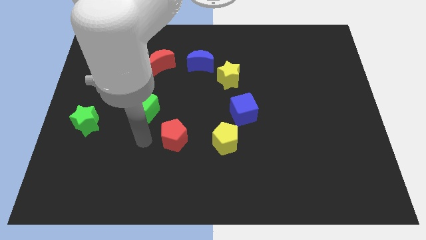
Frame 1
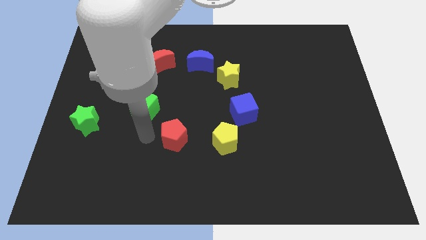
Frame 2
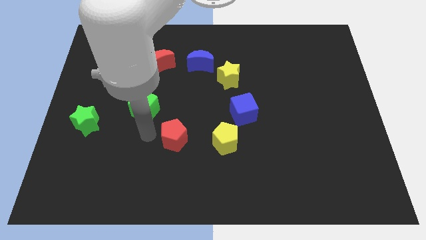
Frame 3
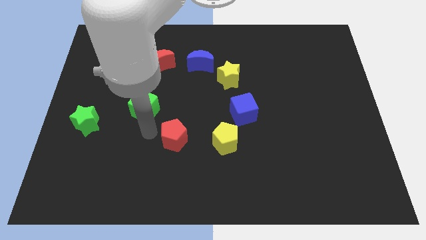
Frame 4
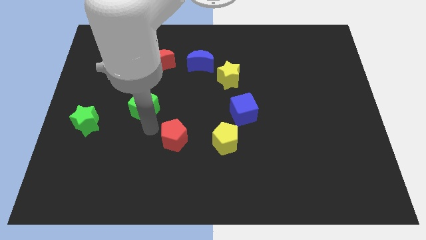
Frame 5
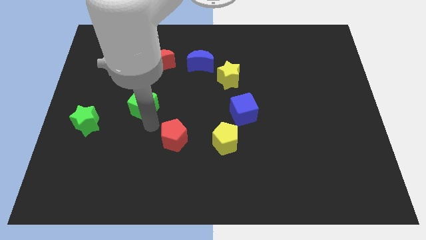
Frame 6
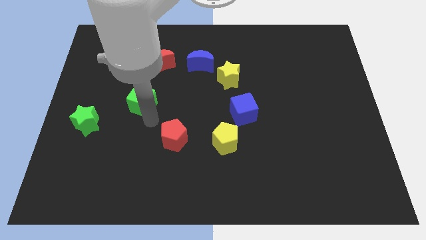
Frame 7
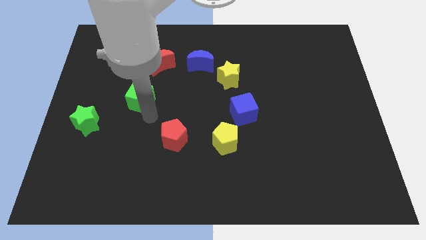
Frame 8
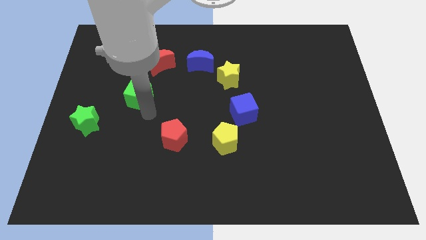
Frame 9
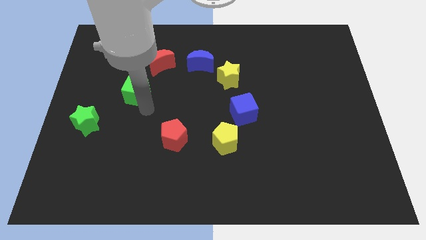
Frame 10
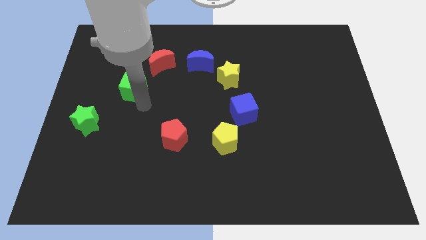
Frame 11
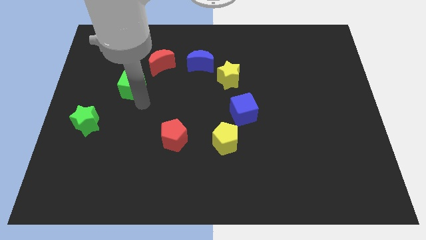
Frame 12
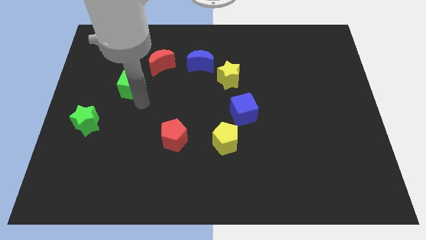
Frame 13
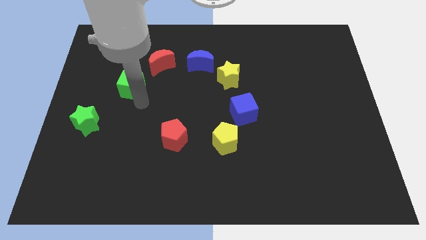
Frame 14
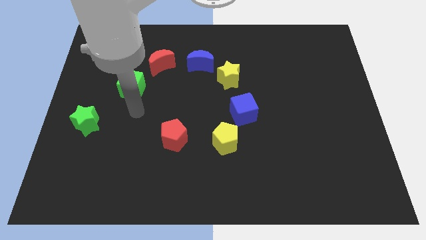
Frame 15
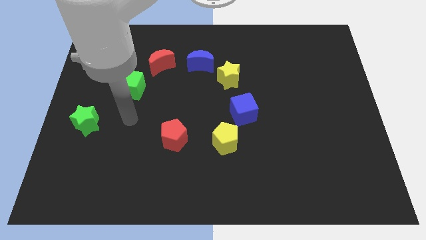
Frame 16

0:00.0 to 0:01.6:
place the green cube diagonally top right to the green star

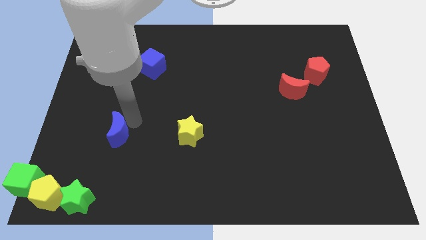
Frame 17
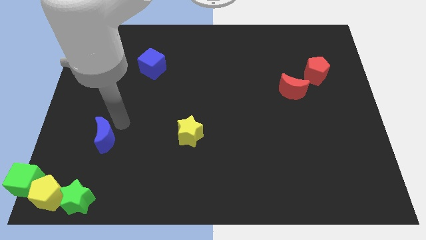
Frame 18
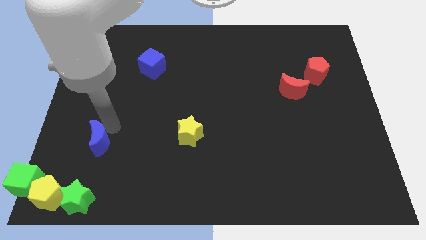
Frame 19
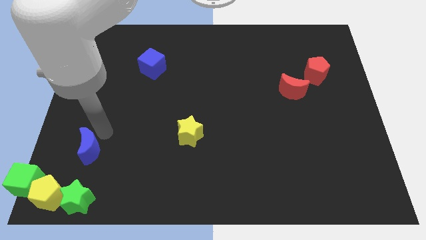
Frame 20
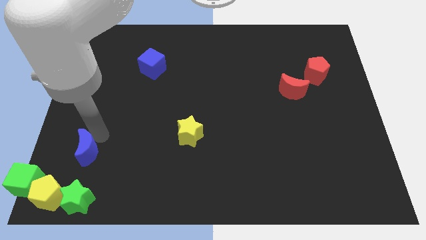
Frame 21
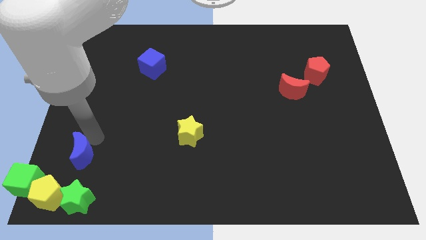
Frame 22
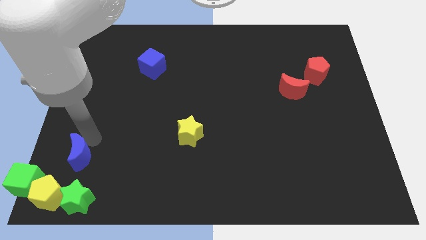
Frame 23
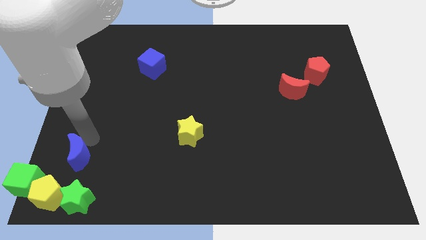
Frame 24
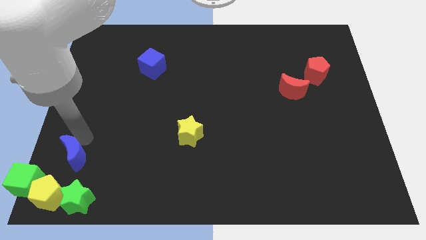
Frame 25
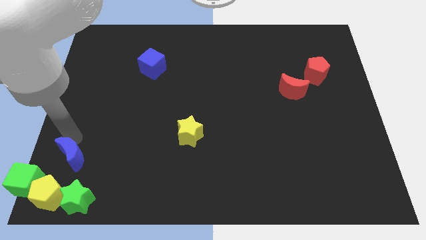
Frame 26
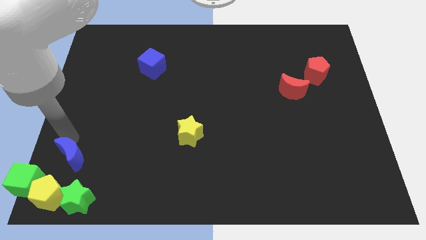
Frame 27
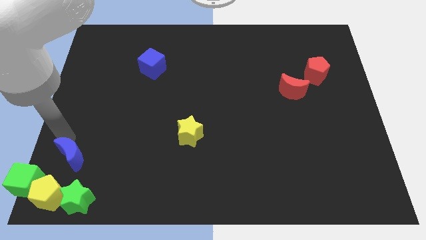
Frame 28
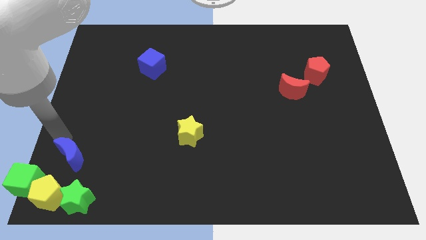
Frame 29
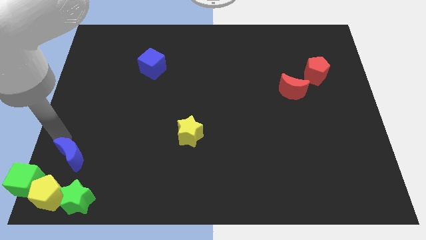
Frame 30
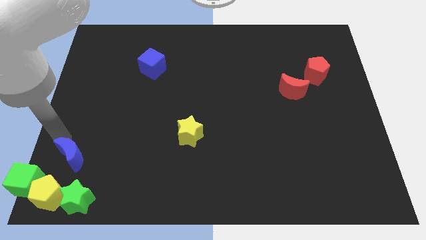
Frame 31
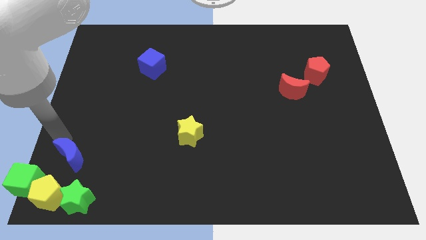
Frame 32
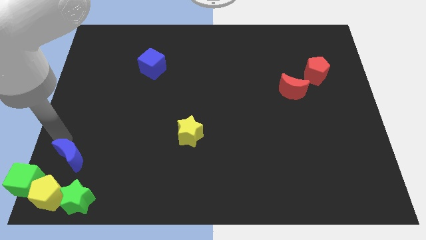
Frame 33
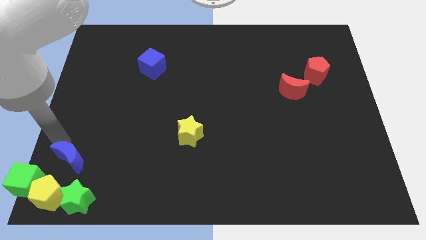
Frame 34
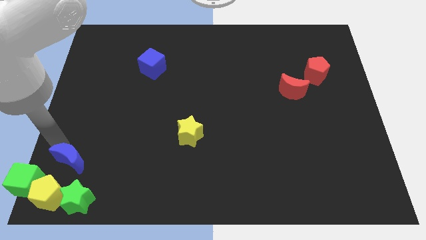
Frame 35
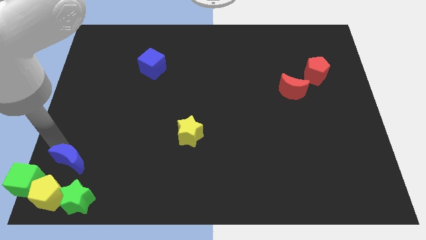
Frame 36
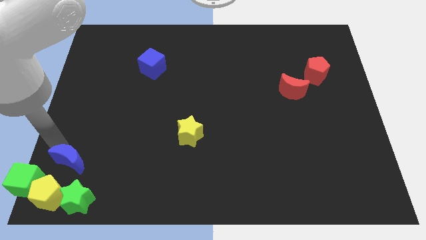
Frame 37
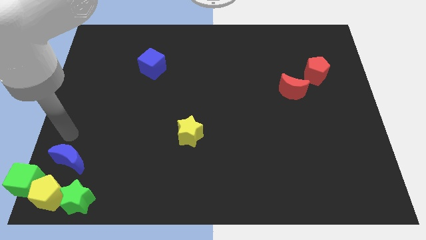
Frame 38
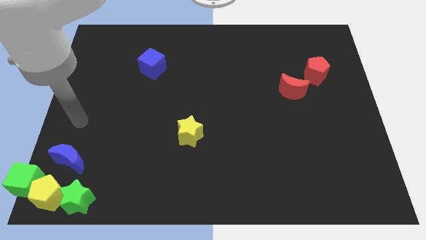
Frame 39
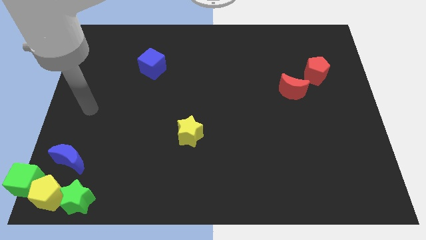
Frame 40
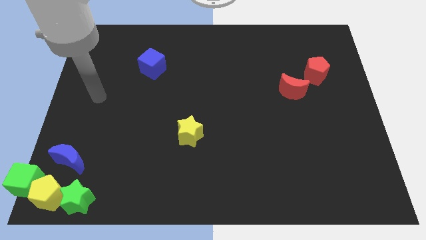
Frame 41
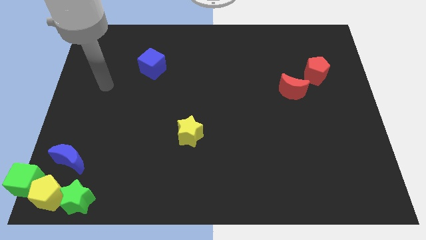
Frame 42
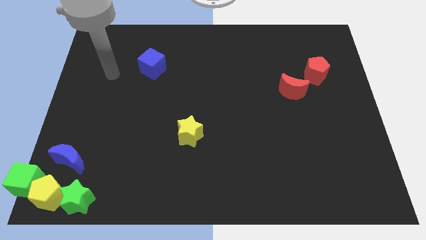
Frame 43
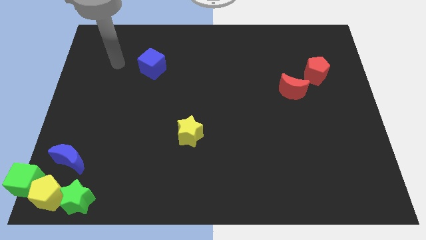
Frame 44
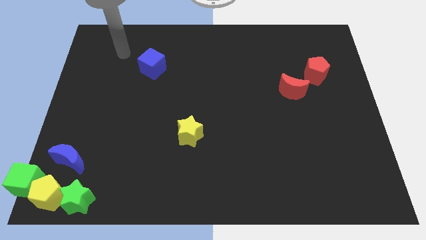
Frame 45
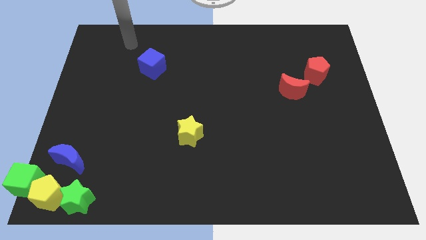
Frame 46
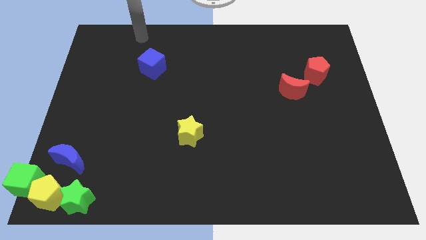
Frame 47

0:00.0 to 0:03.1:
move the blue moon to the top right side of the yellow petagon

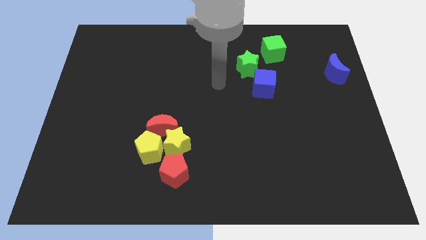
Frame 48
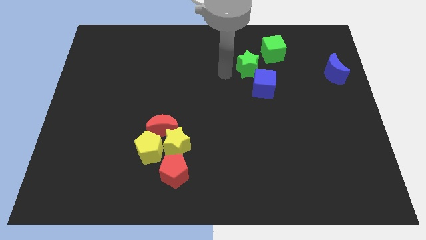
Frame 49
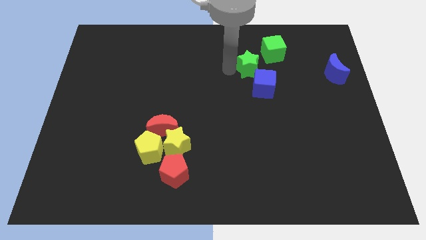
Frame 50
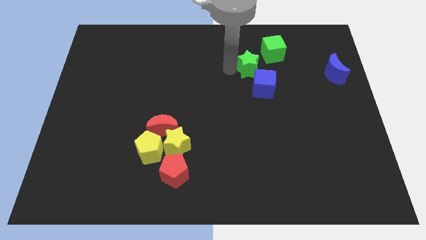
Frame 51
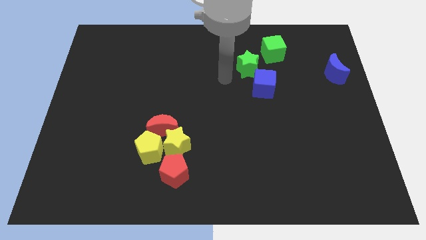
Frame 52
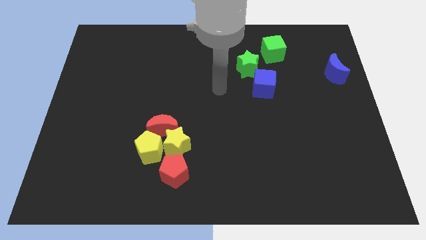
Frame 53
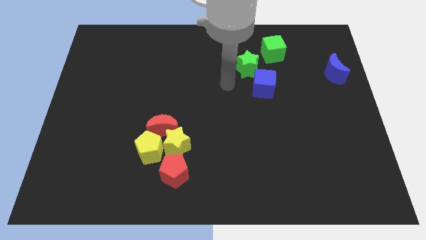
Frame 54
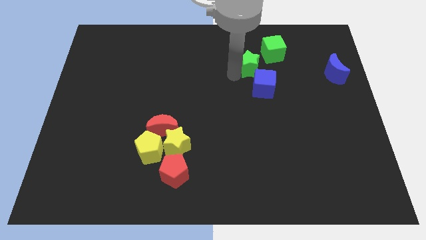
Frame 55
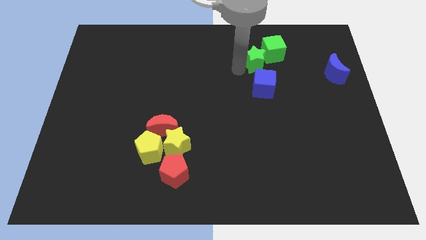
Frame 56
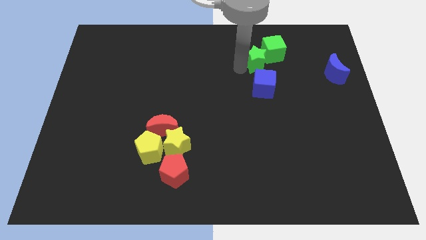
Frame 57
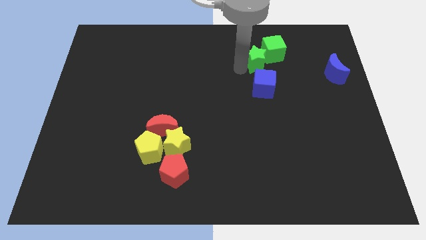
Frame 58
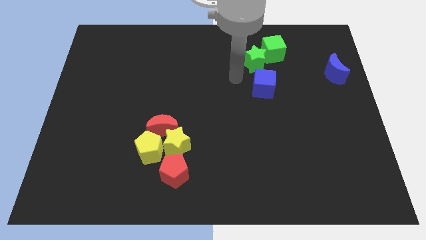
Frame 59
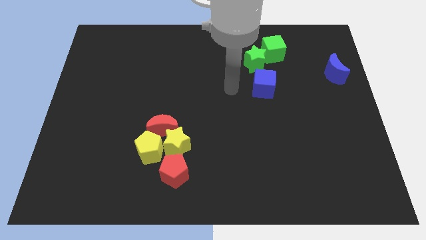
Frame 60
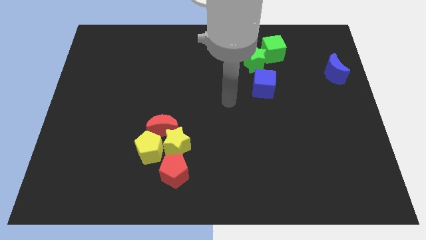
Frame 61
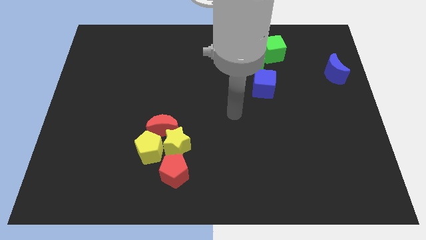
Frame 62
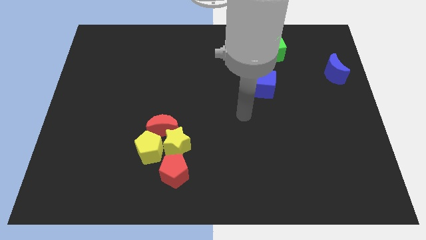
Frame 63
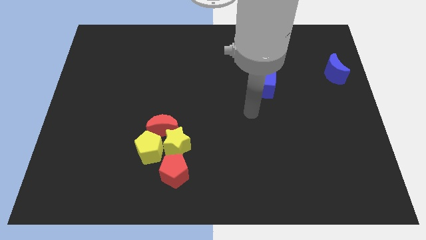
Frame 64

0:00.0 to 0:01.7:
place green star to the left of green cube

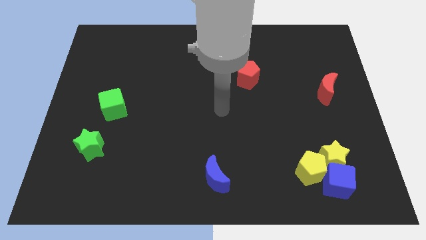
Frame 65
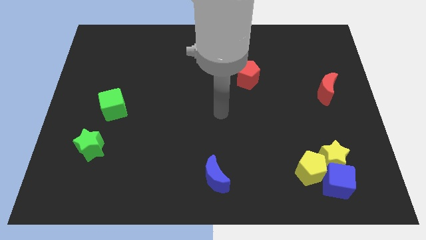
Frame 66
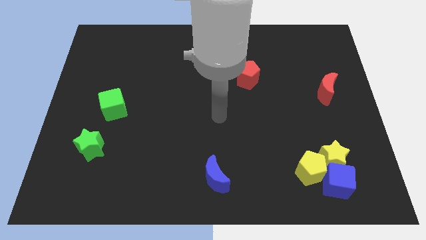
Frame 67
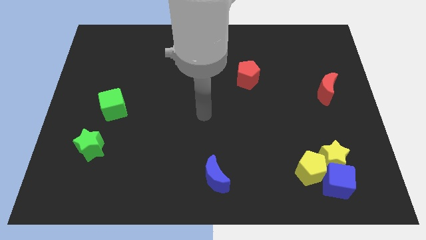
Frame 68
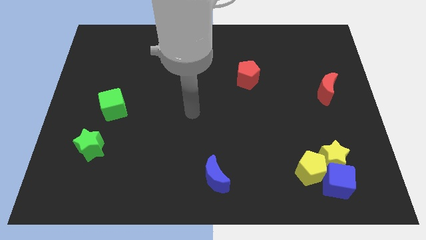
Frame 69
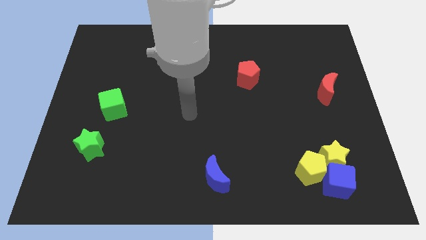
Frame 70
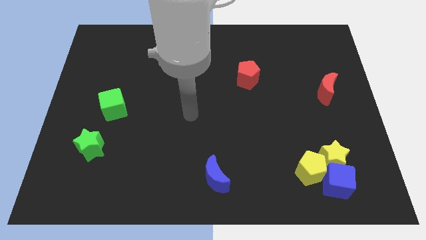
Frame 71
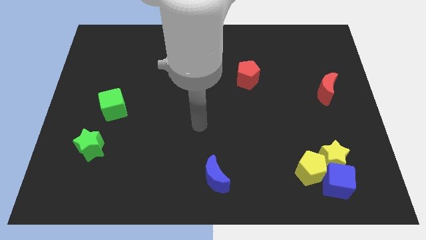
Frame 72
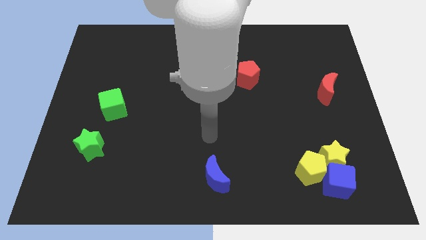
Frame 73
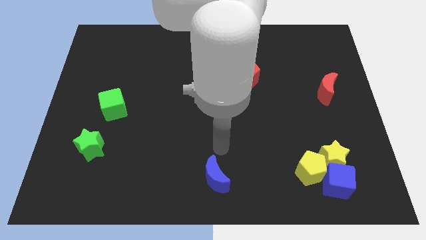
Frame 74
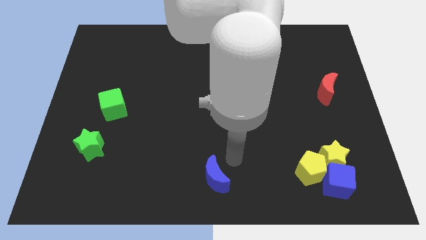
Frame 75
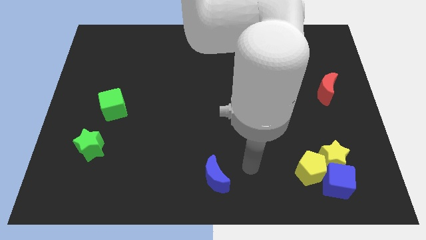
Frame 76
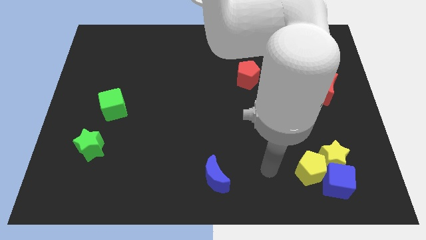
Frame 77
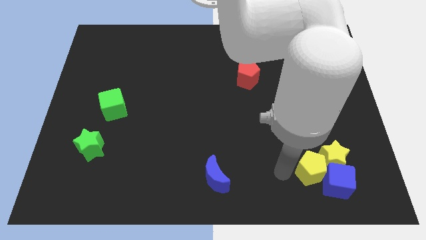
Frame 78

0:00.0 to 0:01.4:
move the arm towards the yellow pentagon

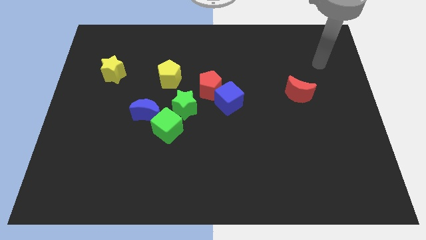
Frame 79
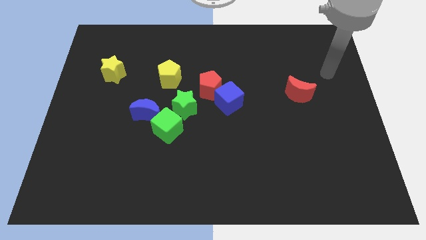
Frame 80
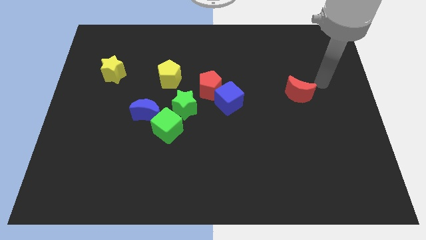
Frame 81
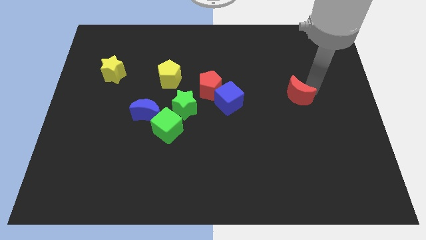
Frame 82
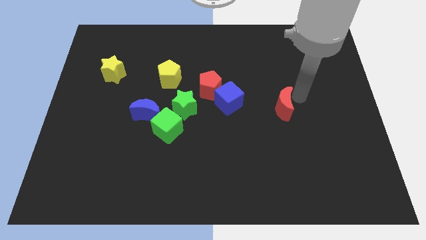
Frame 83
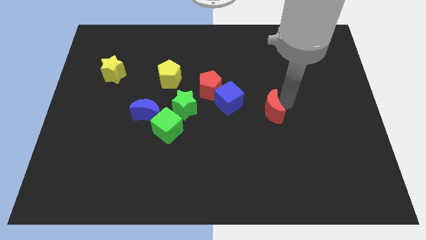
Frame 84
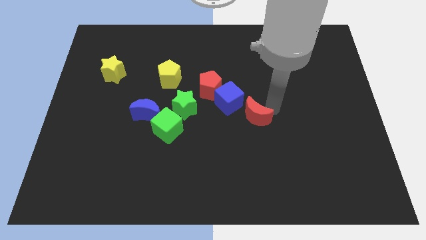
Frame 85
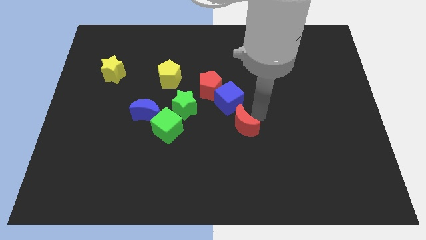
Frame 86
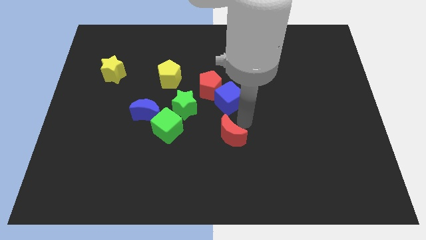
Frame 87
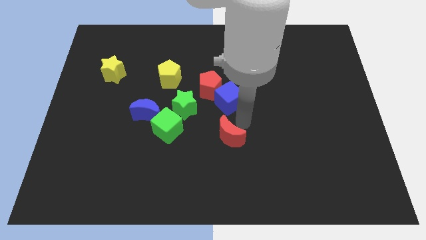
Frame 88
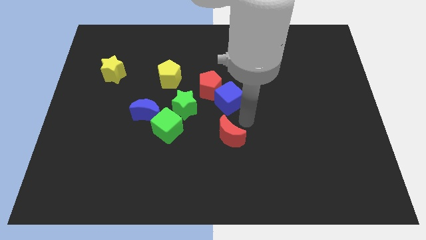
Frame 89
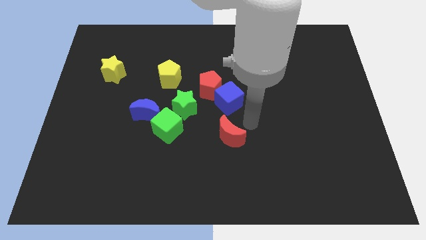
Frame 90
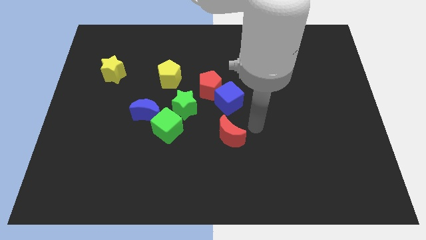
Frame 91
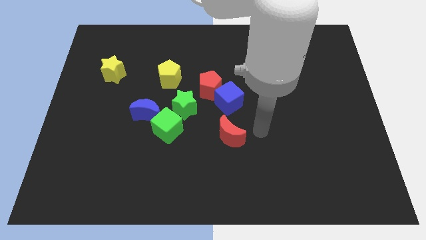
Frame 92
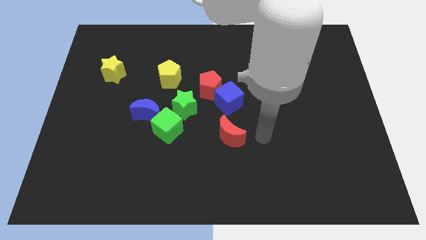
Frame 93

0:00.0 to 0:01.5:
push the red moon below the blue cube
